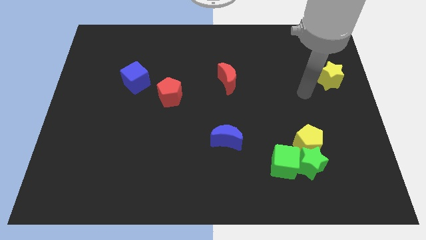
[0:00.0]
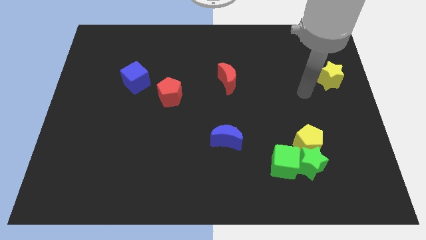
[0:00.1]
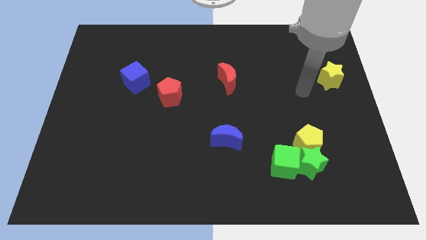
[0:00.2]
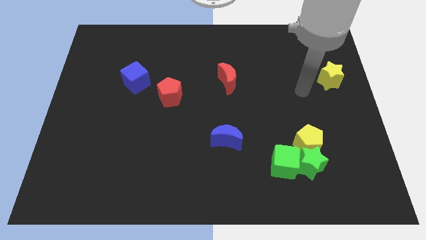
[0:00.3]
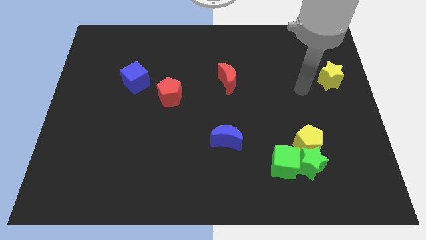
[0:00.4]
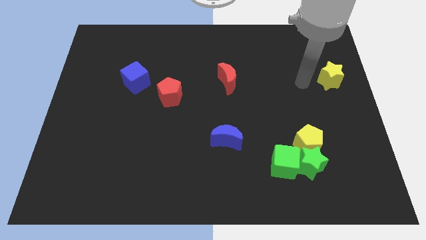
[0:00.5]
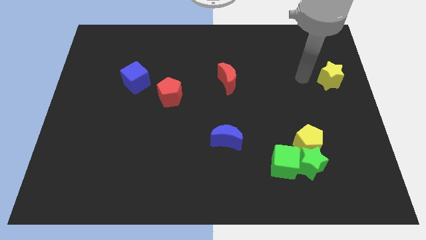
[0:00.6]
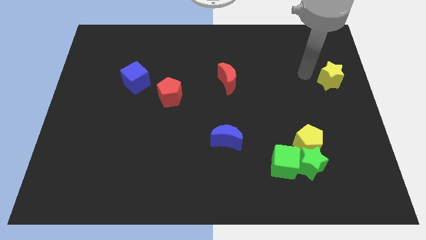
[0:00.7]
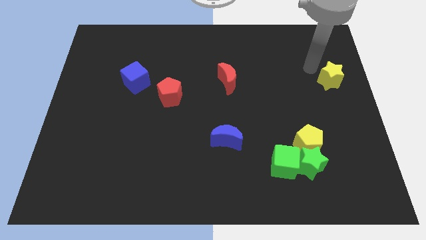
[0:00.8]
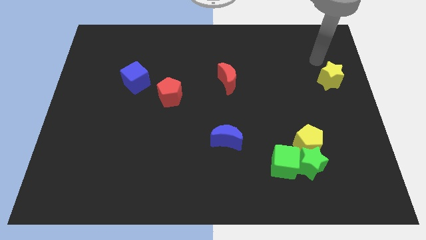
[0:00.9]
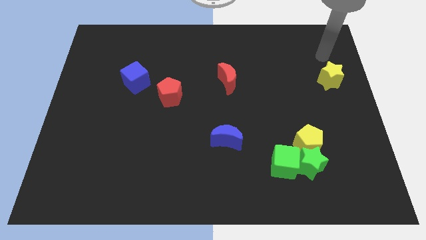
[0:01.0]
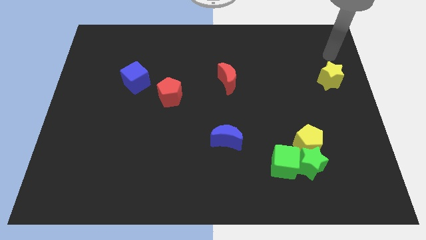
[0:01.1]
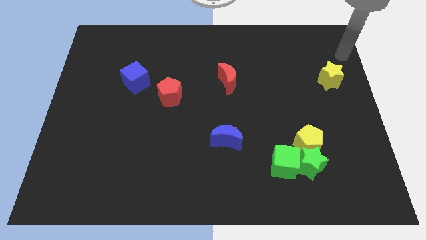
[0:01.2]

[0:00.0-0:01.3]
point your arm at the top of the yellow star

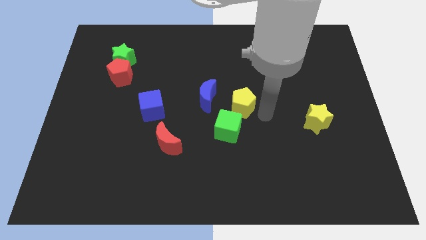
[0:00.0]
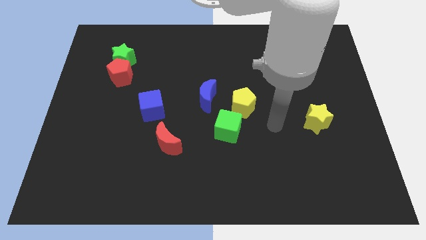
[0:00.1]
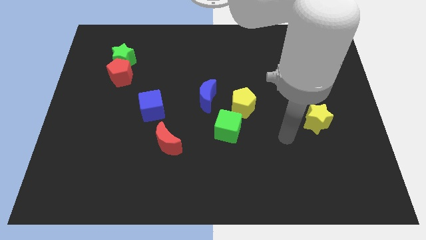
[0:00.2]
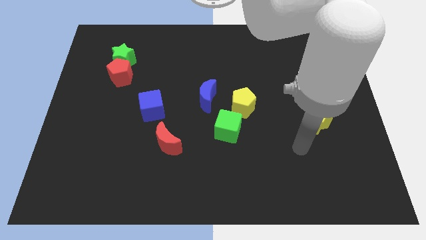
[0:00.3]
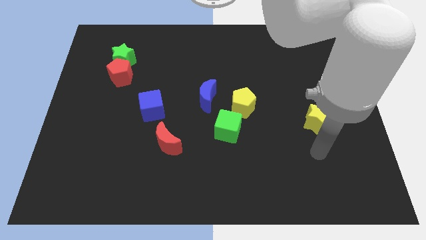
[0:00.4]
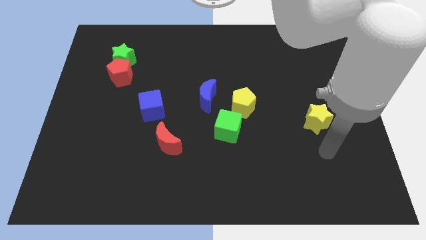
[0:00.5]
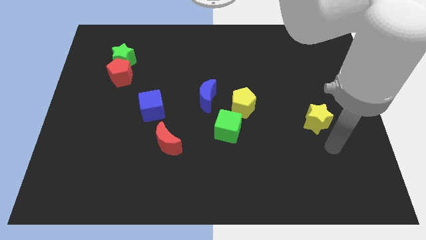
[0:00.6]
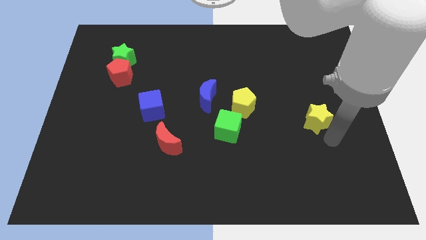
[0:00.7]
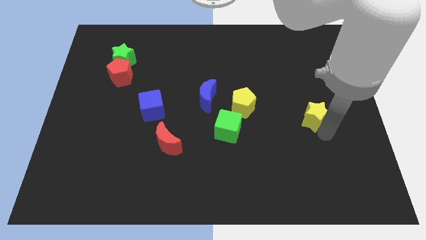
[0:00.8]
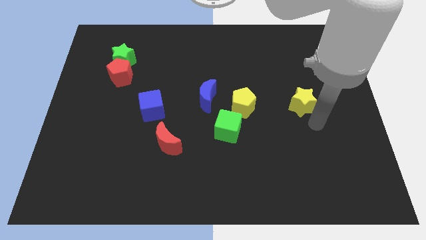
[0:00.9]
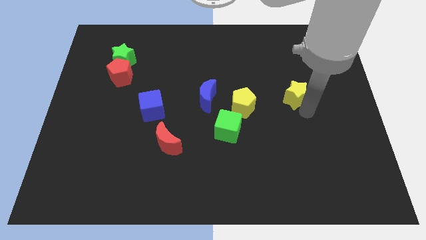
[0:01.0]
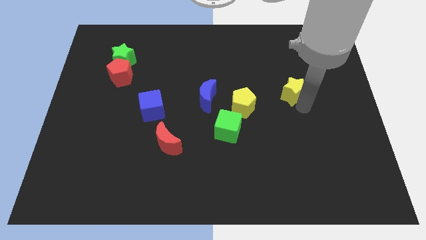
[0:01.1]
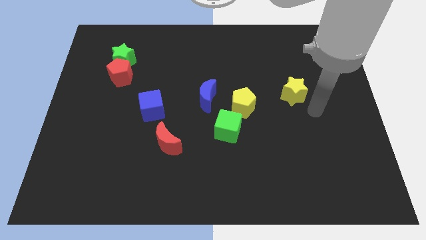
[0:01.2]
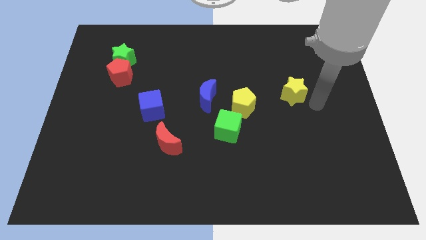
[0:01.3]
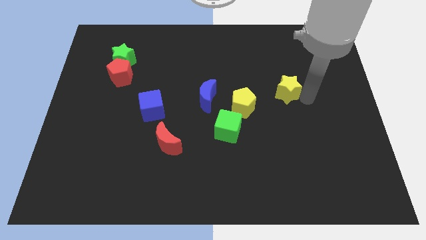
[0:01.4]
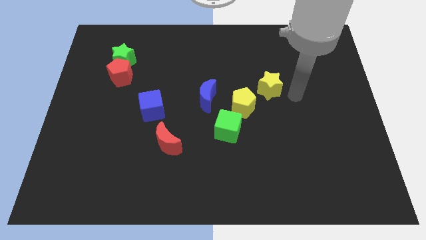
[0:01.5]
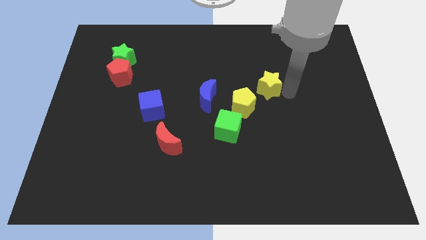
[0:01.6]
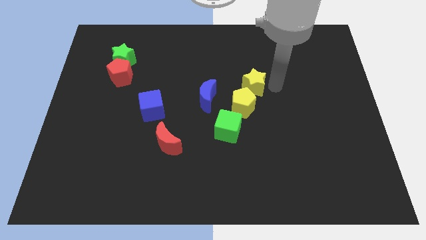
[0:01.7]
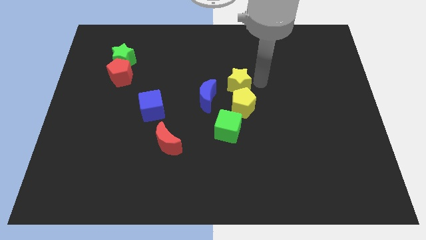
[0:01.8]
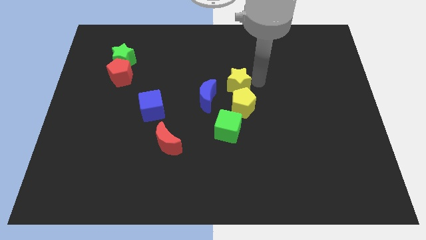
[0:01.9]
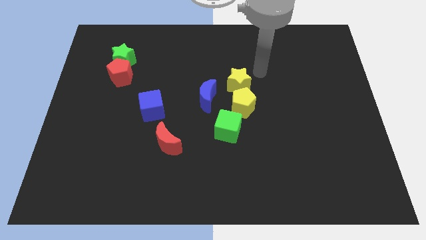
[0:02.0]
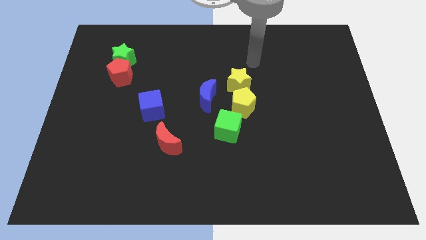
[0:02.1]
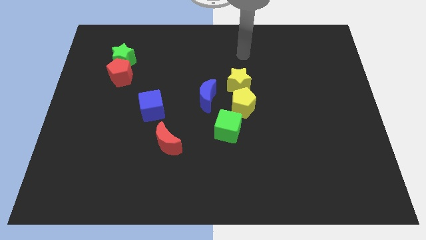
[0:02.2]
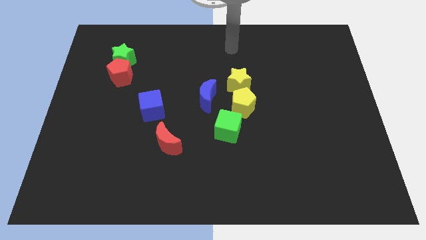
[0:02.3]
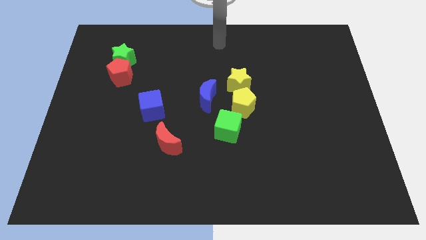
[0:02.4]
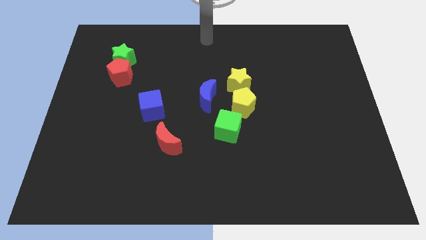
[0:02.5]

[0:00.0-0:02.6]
push the yellow star to the top of the yellow pentagon

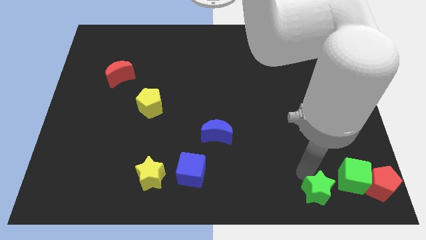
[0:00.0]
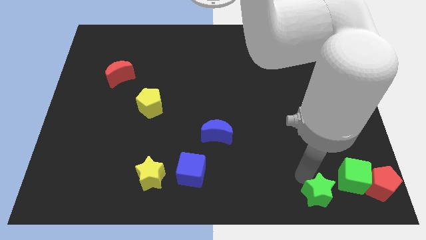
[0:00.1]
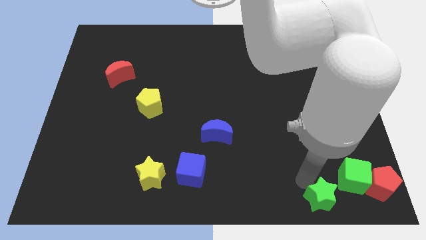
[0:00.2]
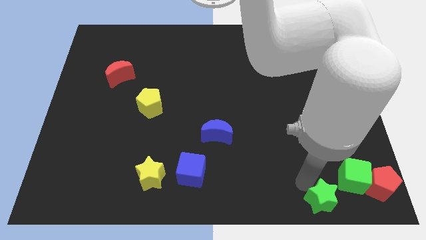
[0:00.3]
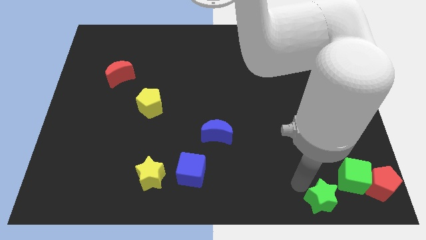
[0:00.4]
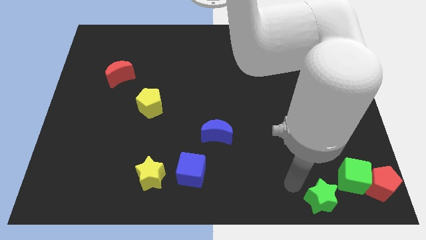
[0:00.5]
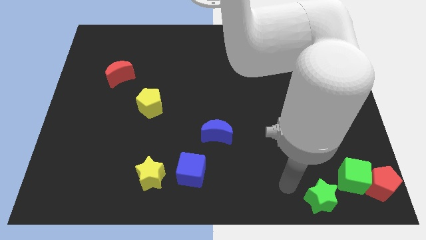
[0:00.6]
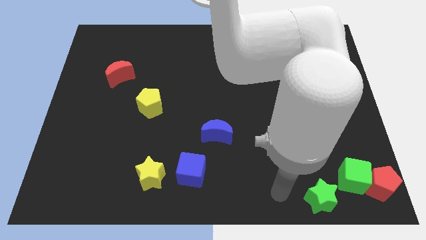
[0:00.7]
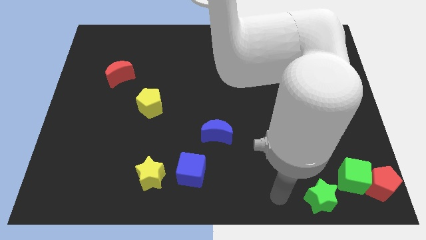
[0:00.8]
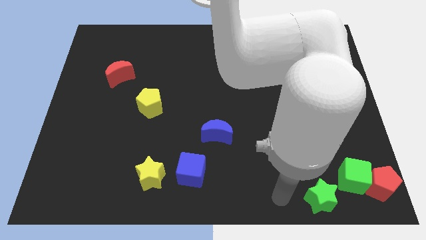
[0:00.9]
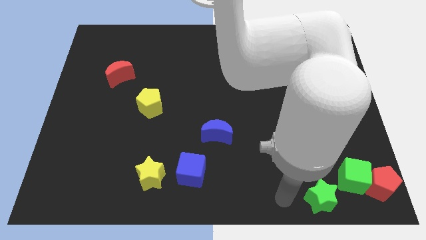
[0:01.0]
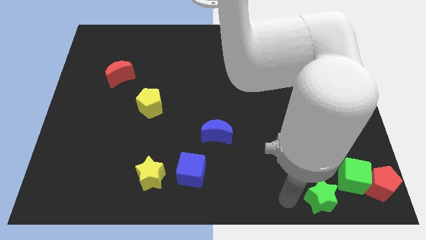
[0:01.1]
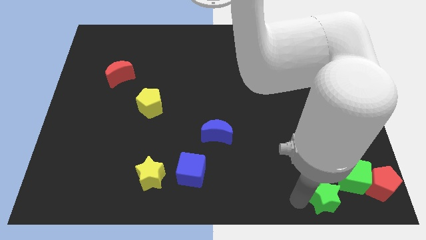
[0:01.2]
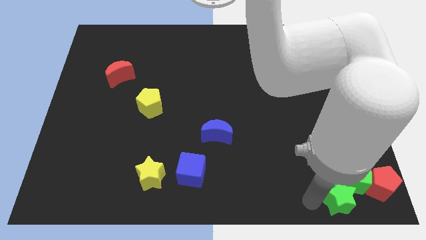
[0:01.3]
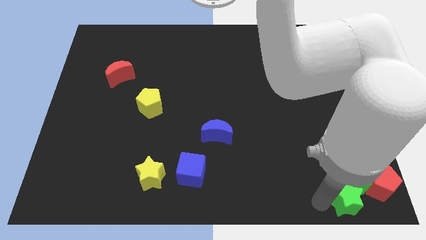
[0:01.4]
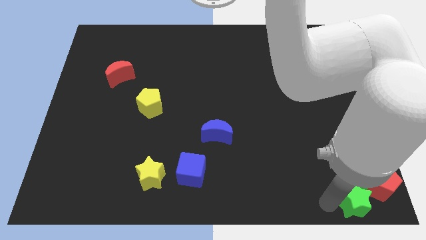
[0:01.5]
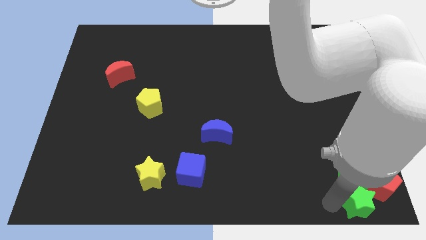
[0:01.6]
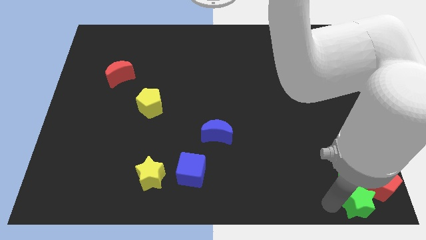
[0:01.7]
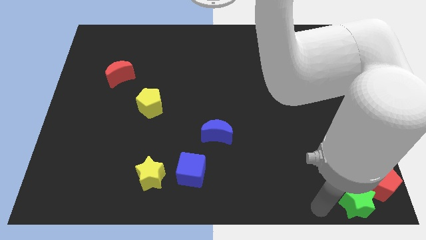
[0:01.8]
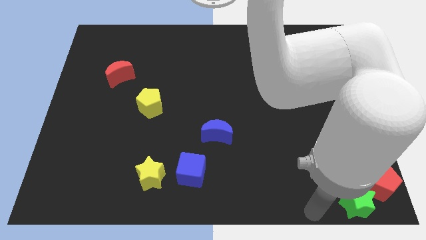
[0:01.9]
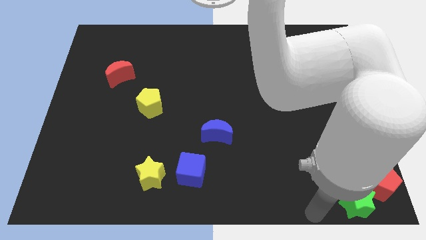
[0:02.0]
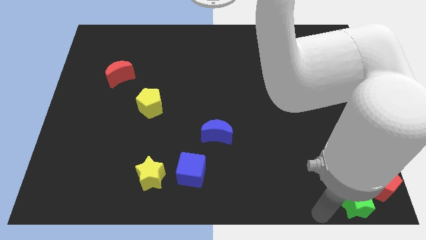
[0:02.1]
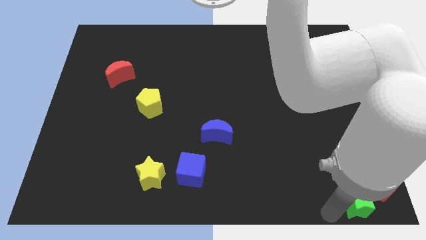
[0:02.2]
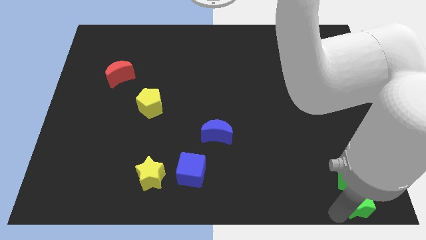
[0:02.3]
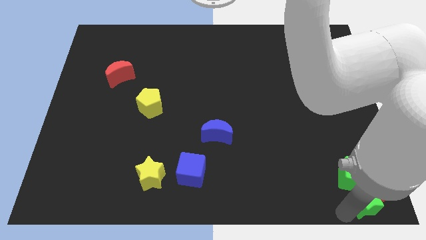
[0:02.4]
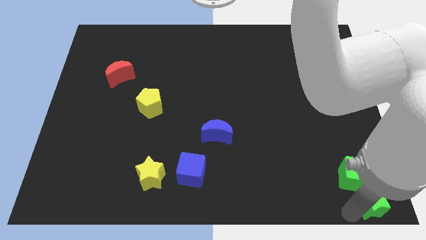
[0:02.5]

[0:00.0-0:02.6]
push the green to the bottom right corner

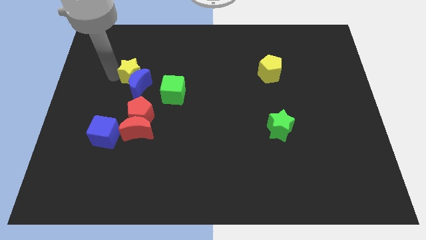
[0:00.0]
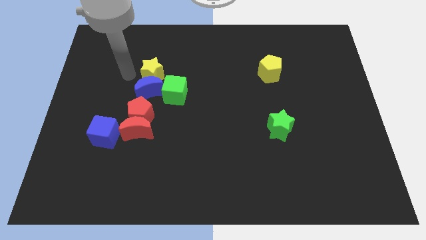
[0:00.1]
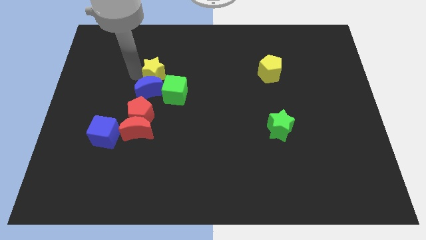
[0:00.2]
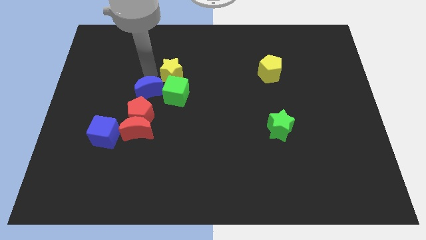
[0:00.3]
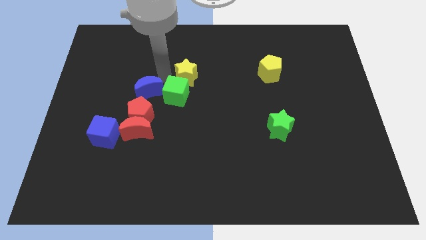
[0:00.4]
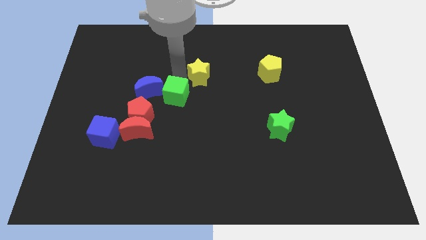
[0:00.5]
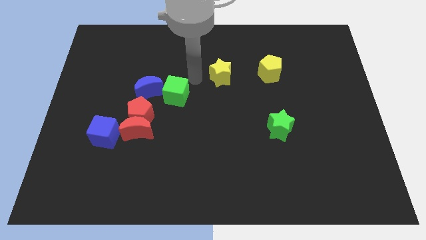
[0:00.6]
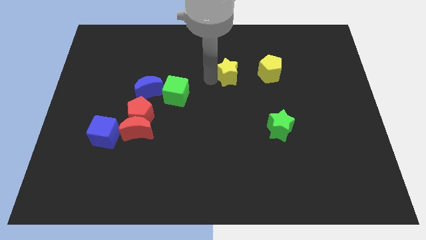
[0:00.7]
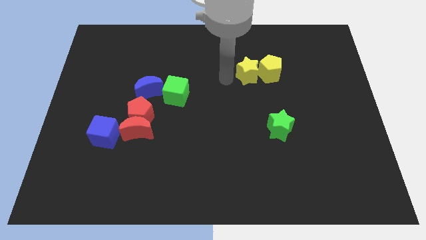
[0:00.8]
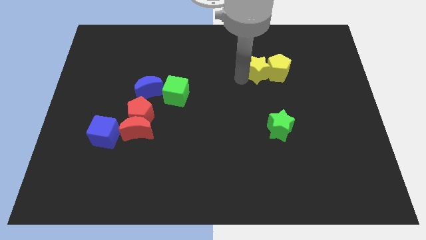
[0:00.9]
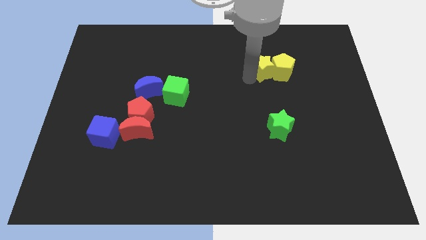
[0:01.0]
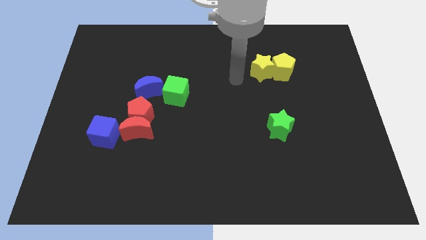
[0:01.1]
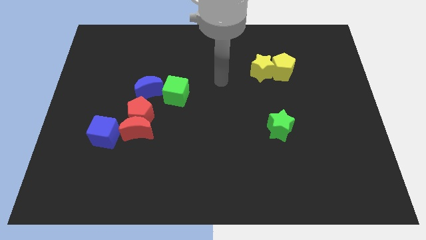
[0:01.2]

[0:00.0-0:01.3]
push the yellow star into te yellow pentagon

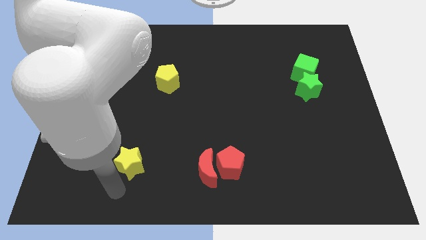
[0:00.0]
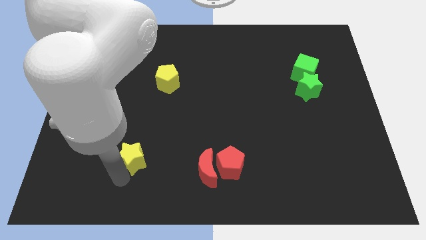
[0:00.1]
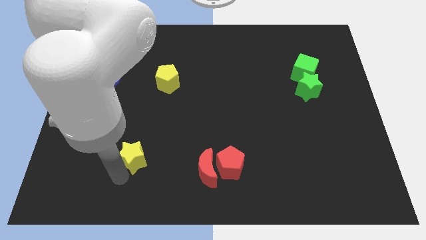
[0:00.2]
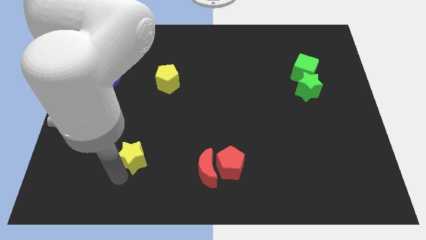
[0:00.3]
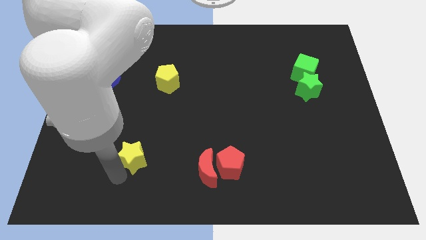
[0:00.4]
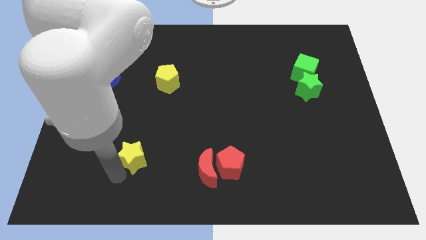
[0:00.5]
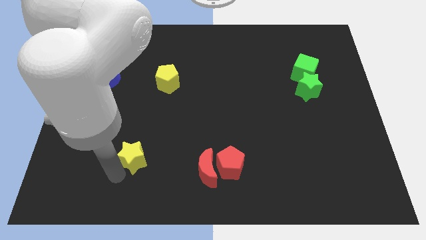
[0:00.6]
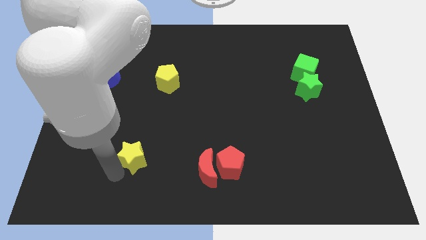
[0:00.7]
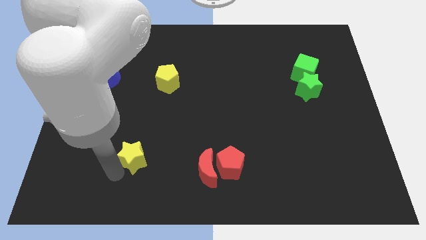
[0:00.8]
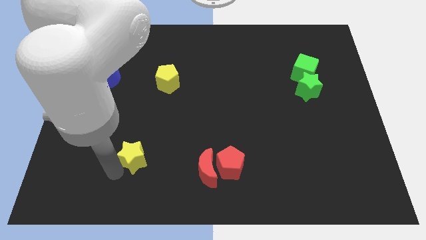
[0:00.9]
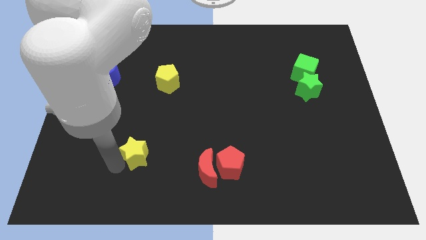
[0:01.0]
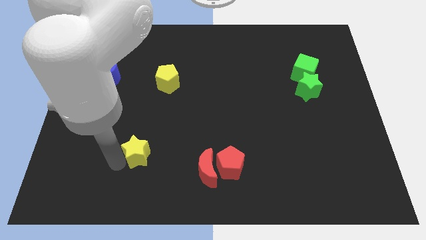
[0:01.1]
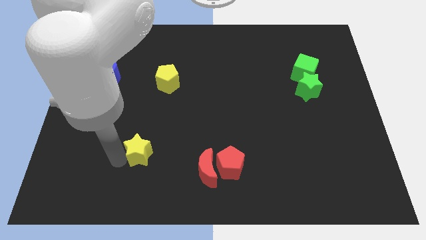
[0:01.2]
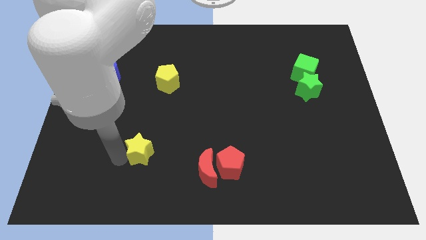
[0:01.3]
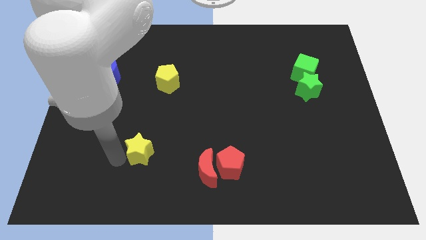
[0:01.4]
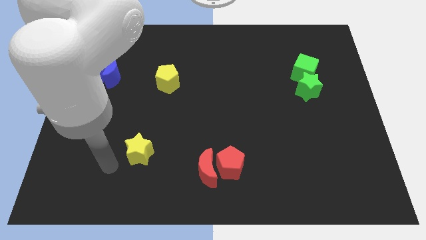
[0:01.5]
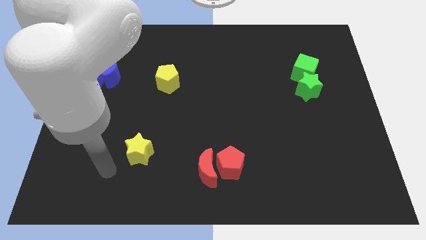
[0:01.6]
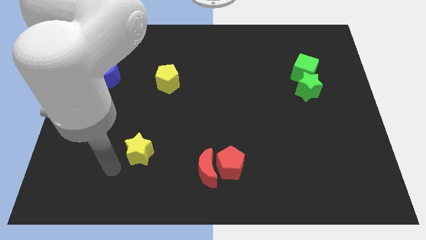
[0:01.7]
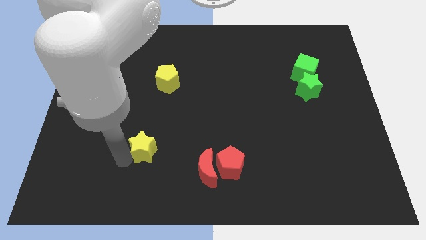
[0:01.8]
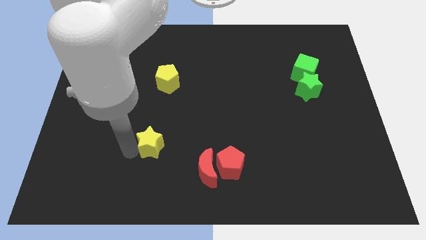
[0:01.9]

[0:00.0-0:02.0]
move the yellow star slightly up
